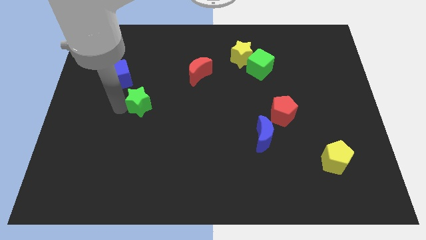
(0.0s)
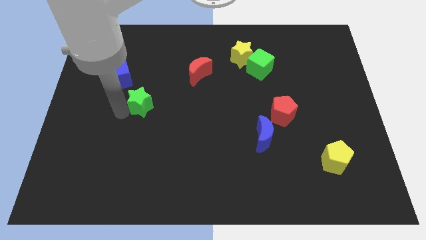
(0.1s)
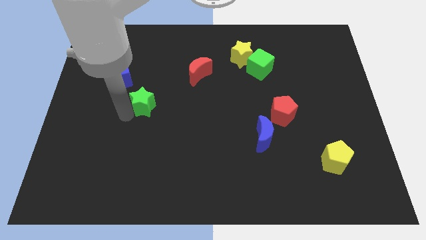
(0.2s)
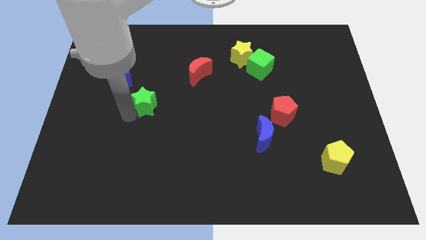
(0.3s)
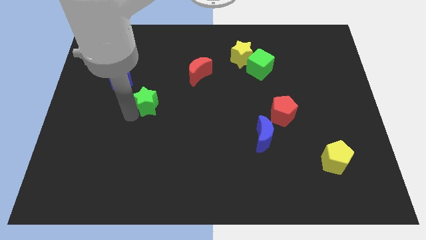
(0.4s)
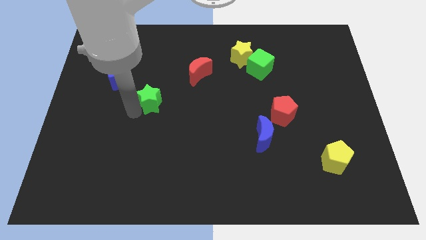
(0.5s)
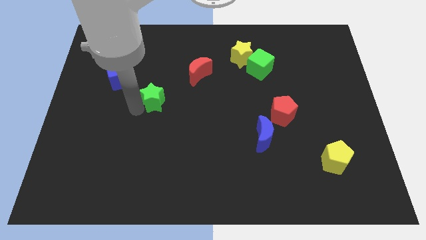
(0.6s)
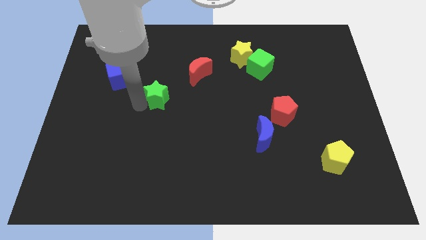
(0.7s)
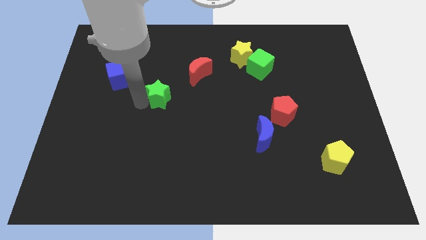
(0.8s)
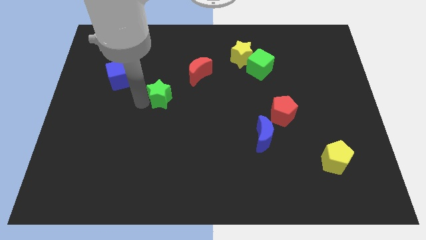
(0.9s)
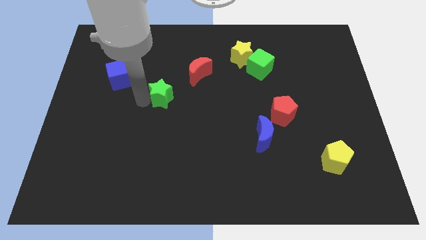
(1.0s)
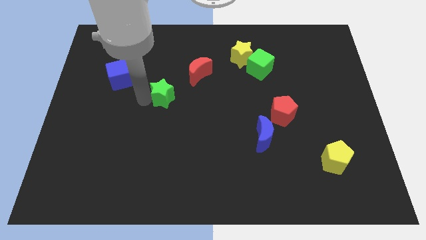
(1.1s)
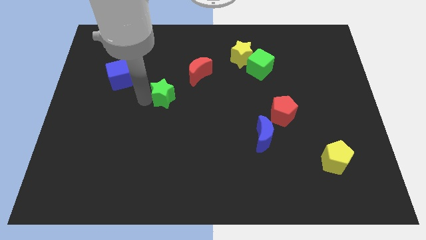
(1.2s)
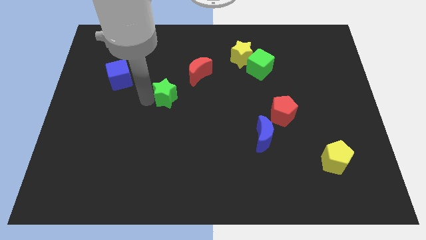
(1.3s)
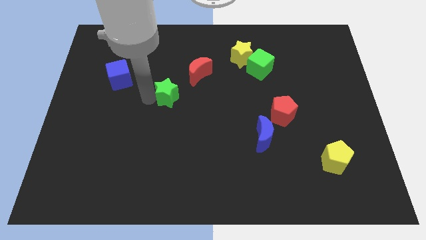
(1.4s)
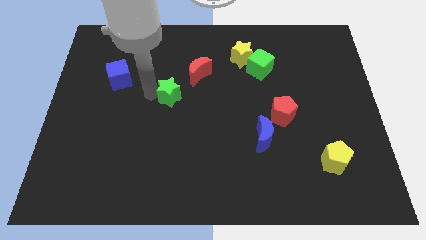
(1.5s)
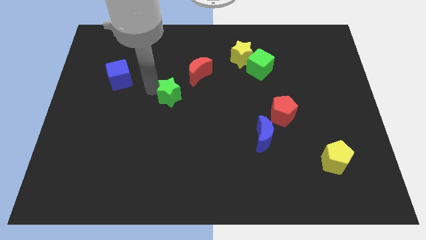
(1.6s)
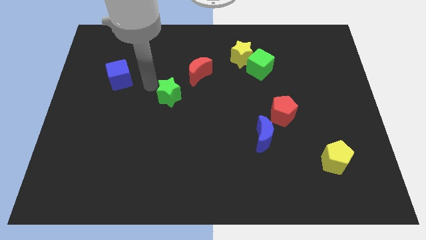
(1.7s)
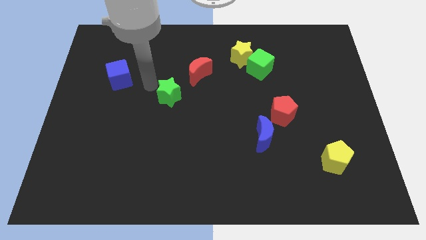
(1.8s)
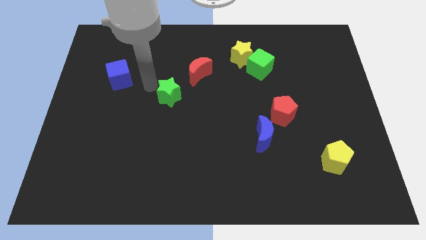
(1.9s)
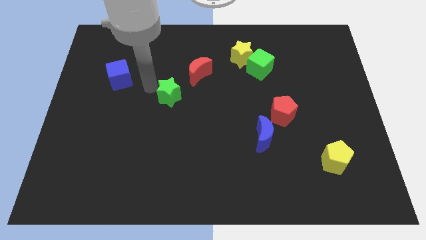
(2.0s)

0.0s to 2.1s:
push the green star diagonally below the red moon

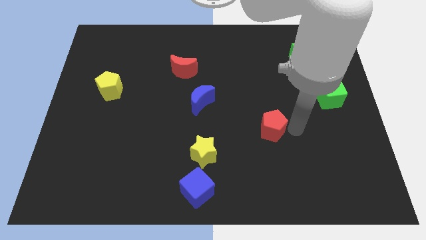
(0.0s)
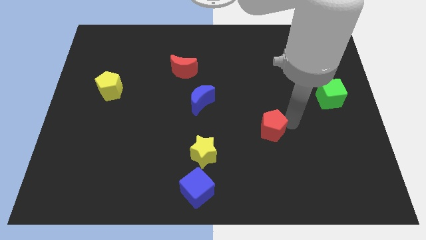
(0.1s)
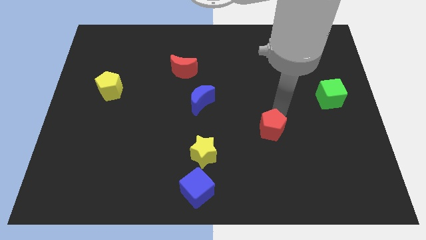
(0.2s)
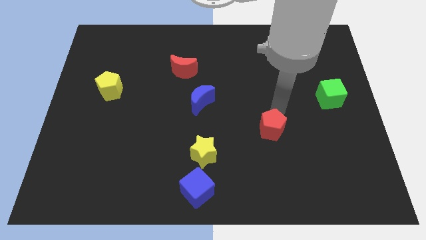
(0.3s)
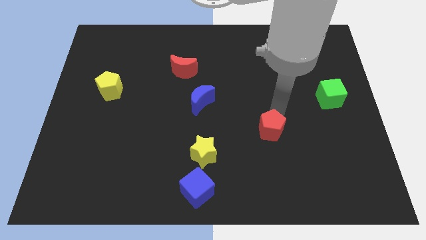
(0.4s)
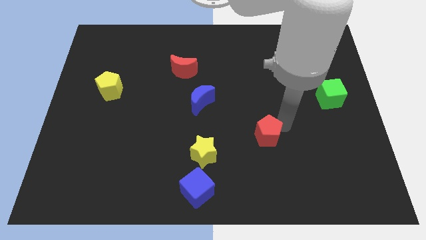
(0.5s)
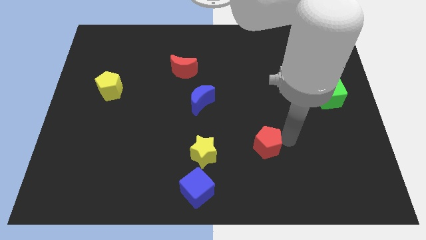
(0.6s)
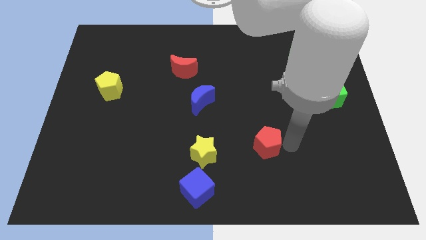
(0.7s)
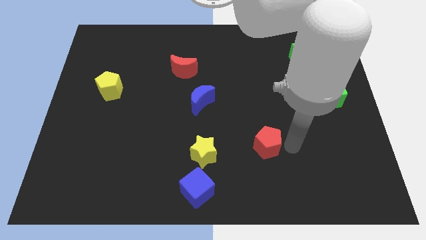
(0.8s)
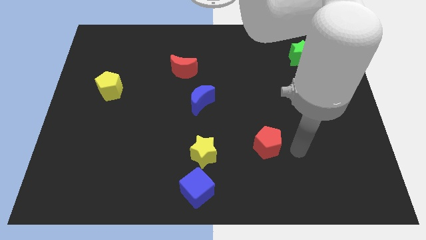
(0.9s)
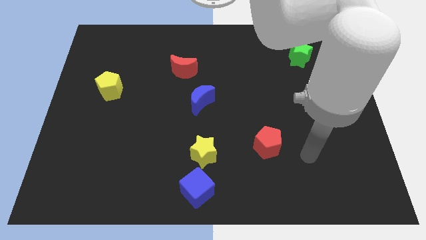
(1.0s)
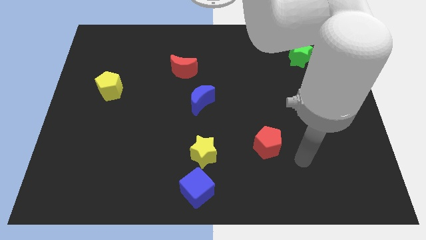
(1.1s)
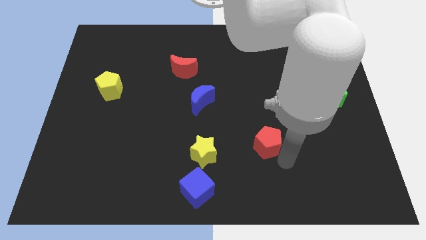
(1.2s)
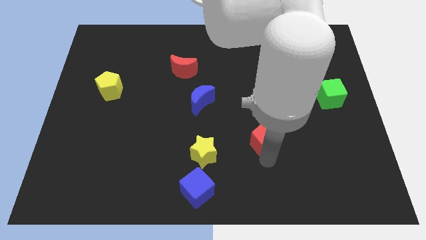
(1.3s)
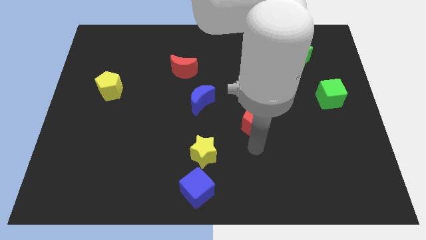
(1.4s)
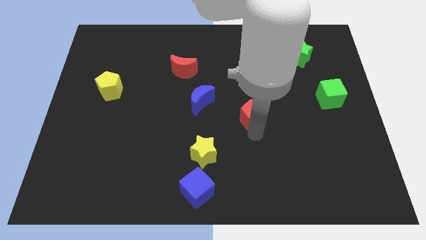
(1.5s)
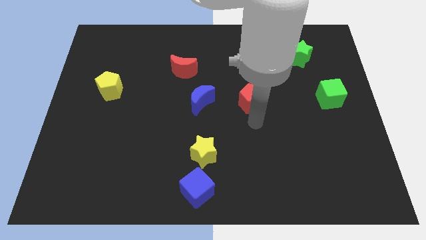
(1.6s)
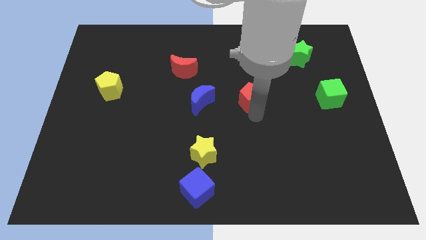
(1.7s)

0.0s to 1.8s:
move red pentagon to the right side of the blue moon

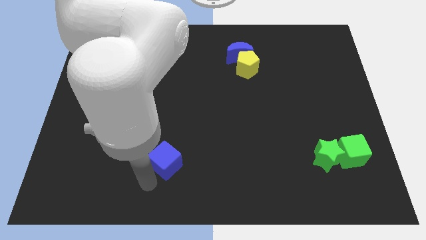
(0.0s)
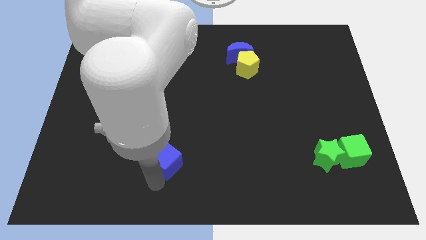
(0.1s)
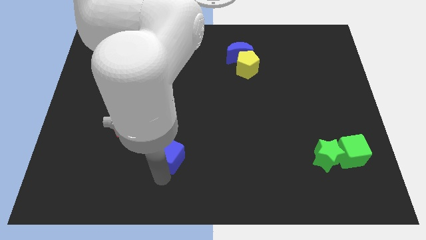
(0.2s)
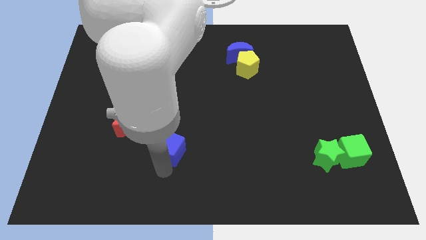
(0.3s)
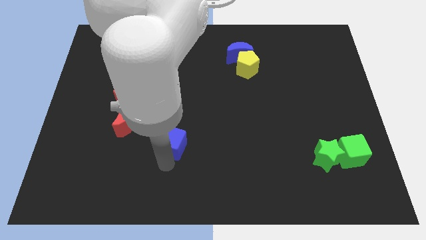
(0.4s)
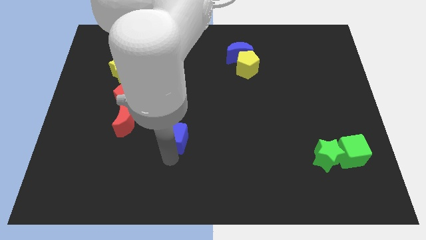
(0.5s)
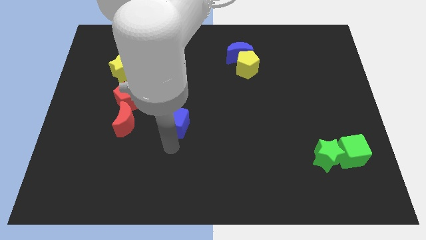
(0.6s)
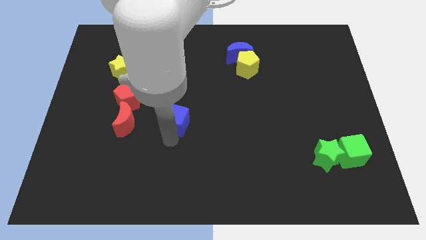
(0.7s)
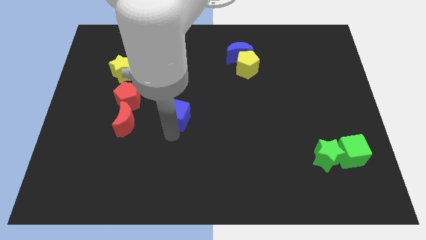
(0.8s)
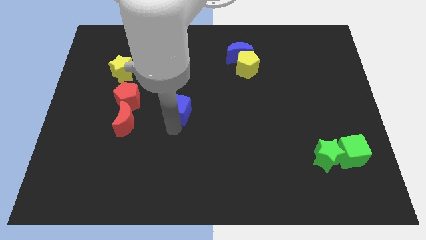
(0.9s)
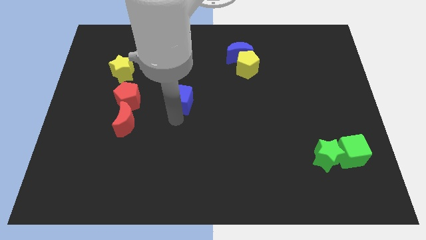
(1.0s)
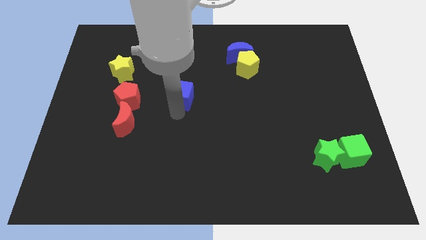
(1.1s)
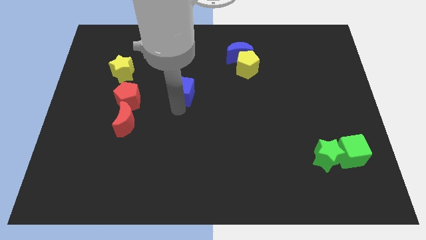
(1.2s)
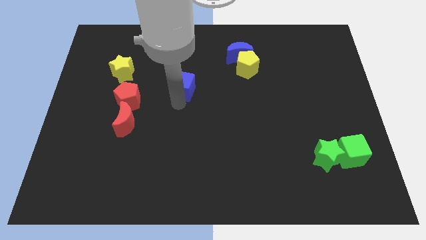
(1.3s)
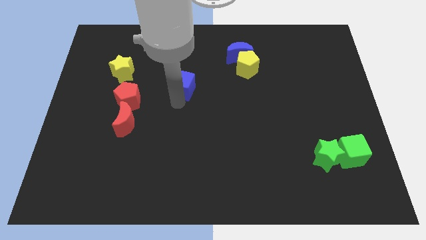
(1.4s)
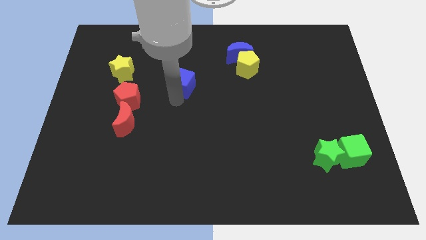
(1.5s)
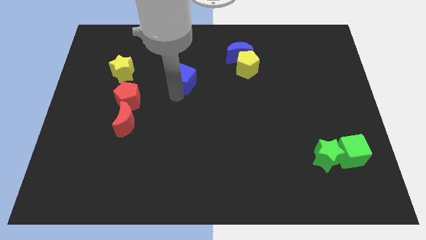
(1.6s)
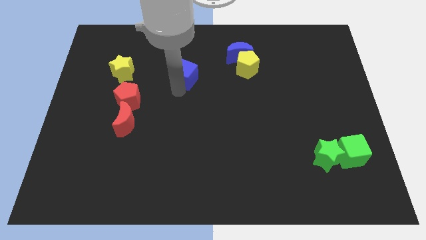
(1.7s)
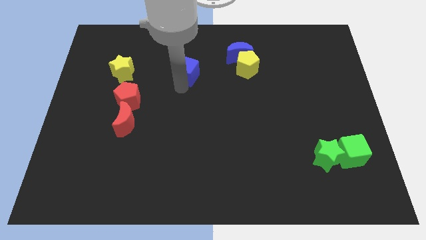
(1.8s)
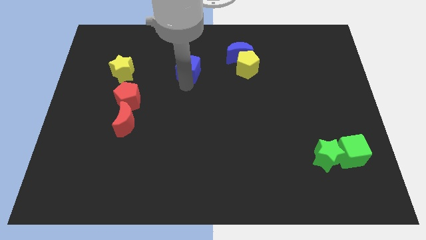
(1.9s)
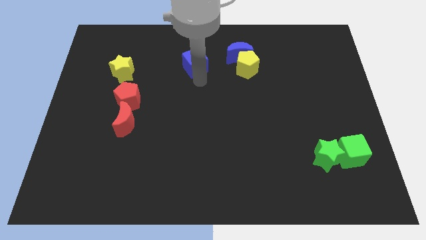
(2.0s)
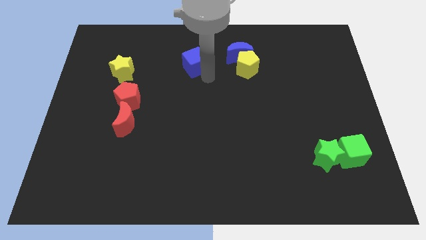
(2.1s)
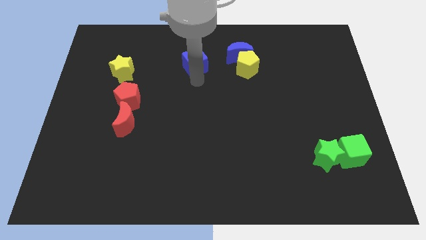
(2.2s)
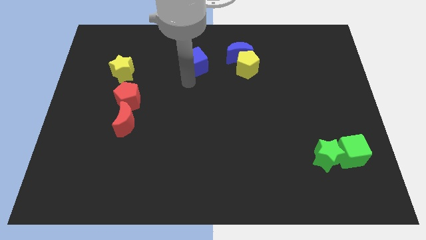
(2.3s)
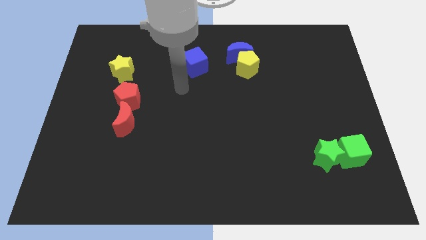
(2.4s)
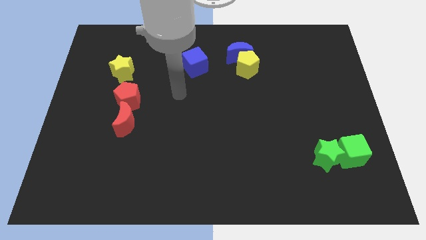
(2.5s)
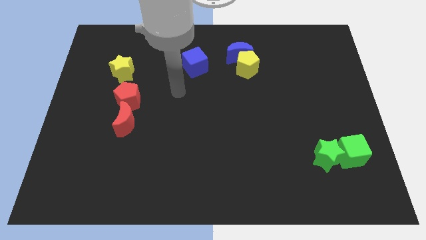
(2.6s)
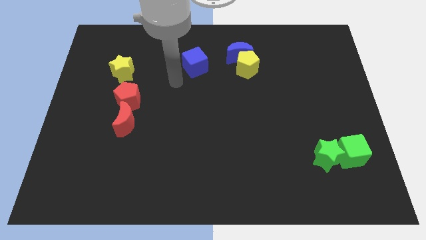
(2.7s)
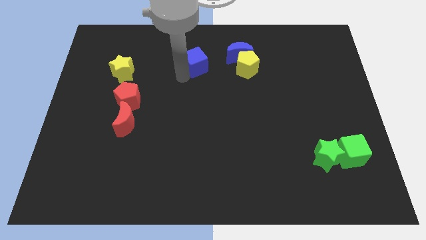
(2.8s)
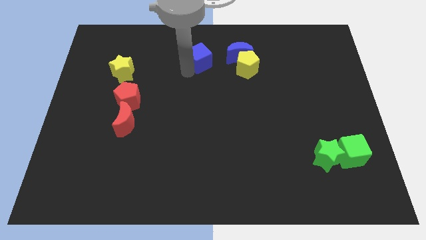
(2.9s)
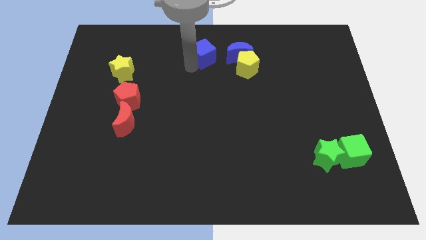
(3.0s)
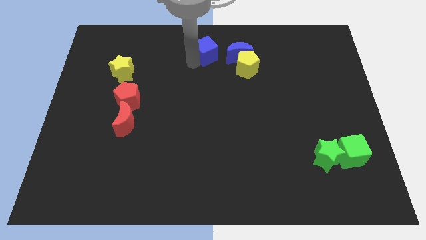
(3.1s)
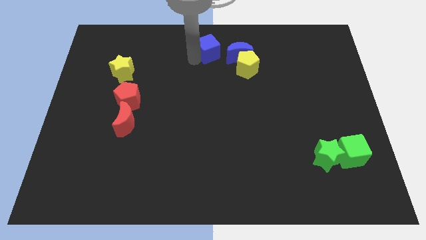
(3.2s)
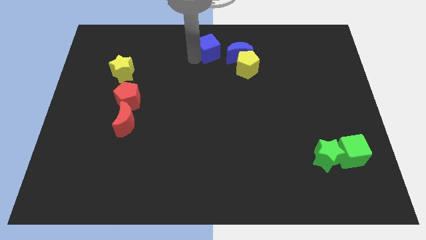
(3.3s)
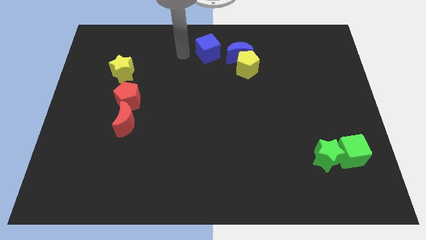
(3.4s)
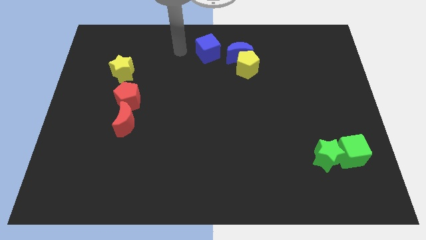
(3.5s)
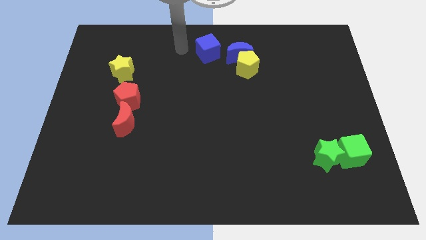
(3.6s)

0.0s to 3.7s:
push the blue cube to the top

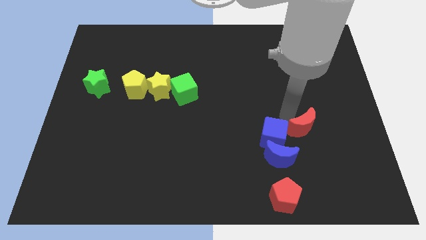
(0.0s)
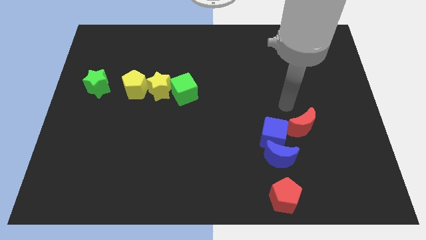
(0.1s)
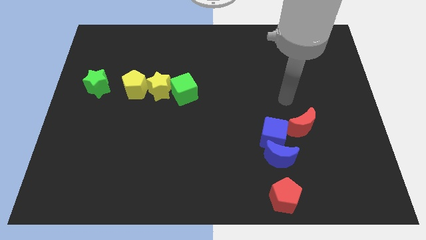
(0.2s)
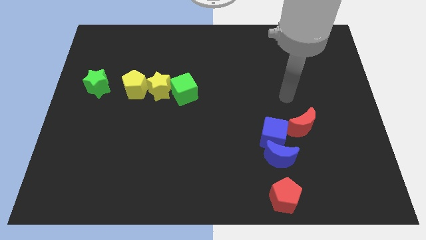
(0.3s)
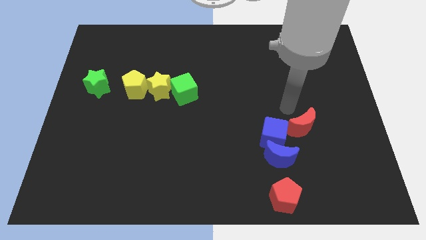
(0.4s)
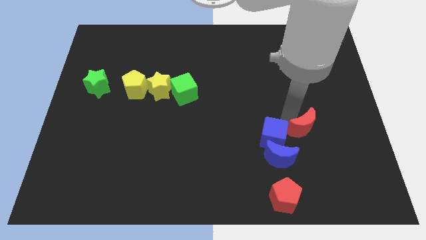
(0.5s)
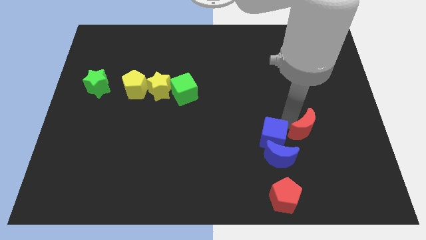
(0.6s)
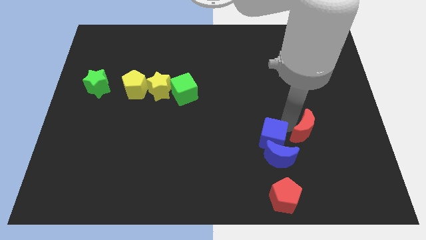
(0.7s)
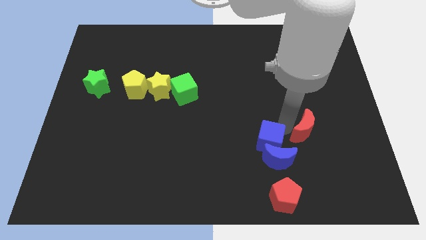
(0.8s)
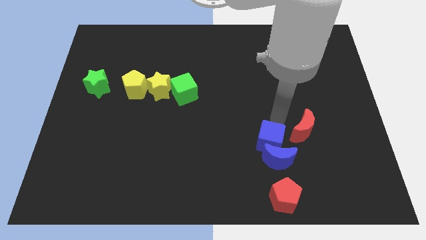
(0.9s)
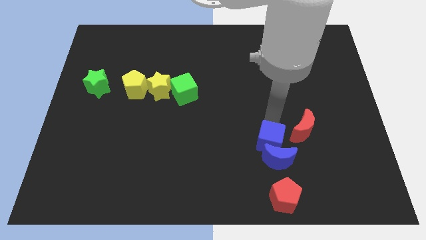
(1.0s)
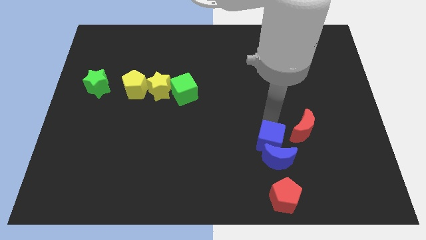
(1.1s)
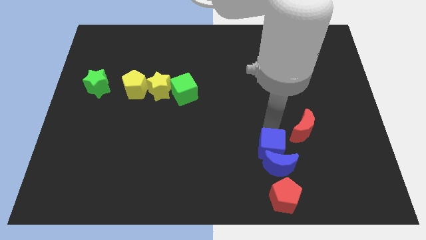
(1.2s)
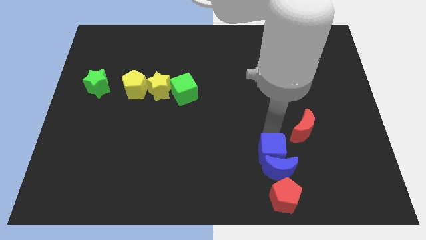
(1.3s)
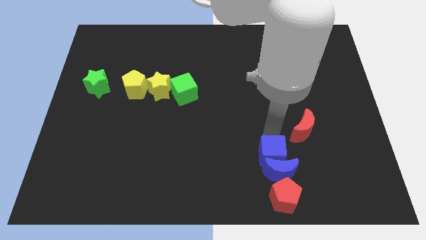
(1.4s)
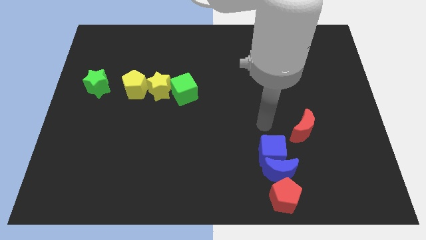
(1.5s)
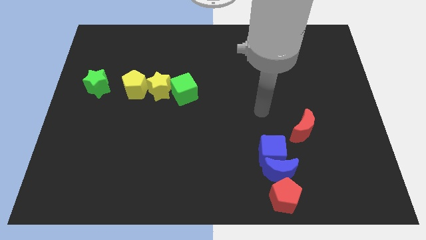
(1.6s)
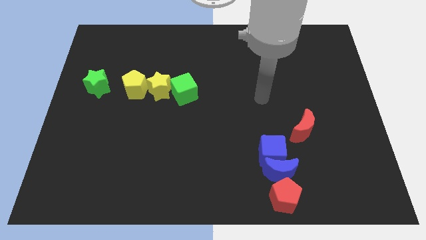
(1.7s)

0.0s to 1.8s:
push blue cube and moon close to the red pentagon
